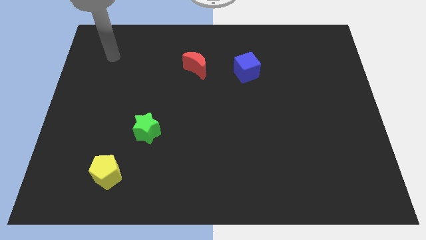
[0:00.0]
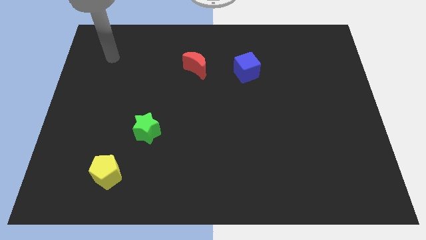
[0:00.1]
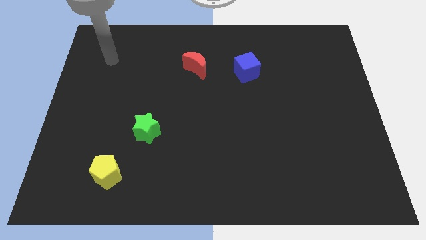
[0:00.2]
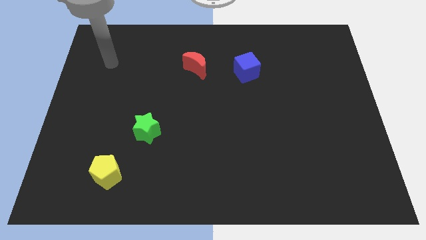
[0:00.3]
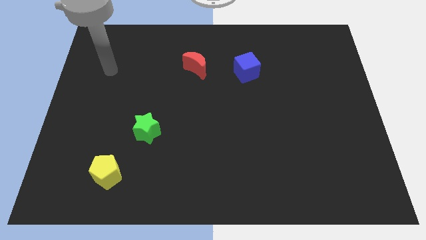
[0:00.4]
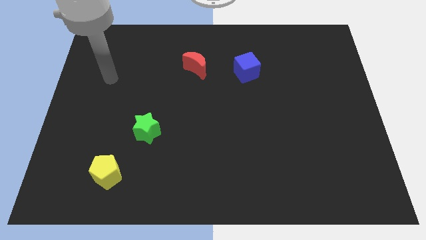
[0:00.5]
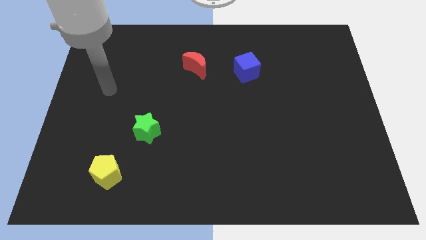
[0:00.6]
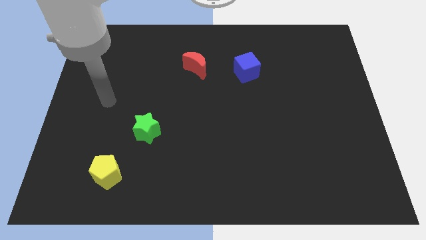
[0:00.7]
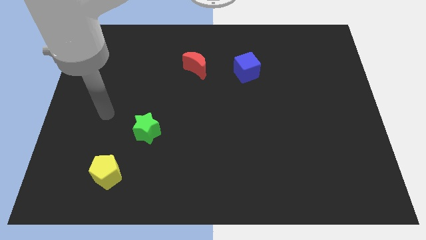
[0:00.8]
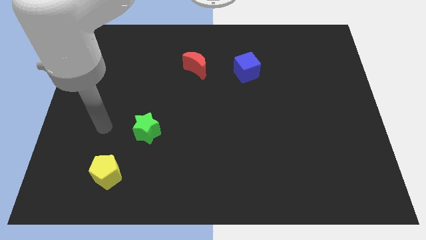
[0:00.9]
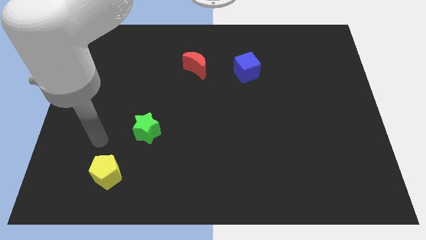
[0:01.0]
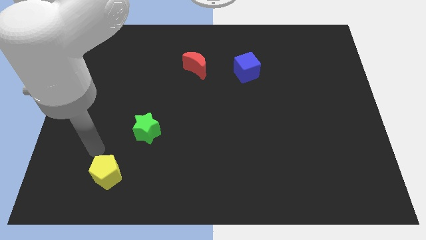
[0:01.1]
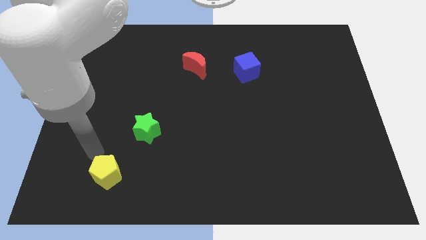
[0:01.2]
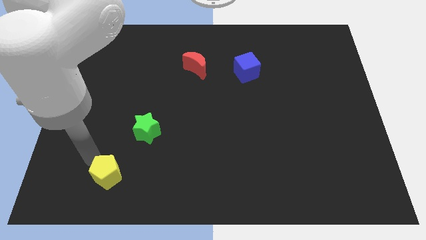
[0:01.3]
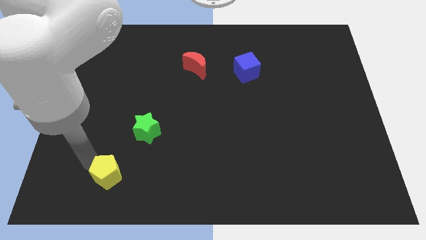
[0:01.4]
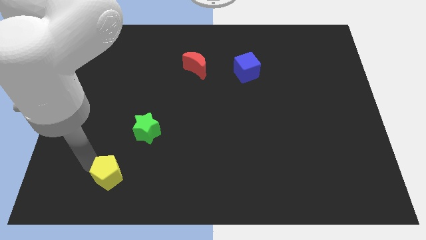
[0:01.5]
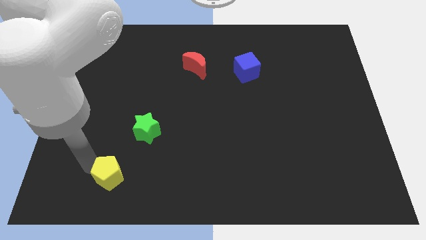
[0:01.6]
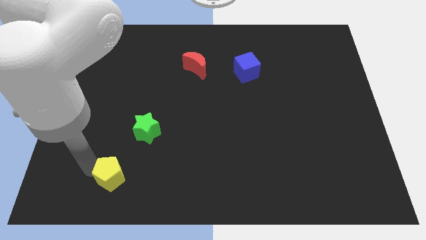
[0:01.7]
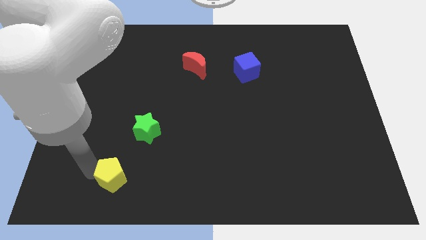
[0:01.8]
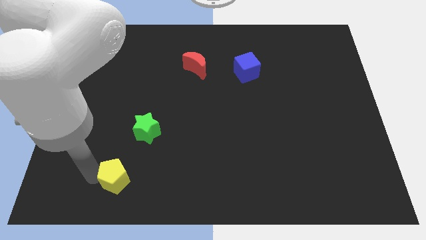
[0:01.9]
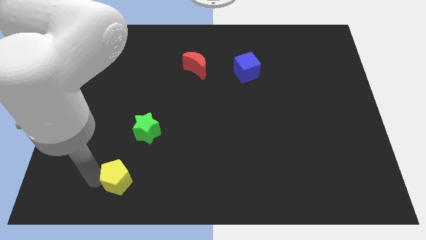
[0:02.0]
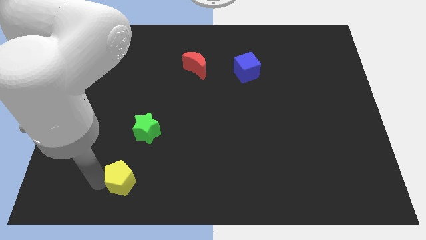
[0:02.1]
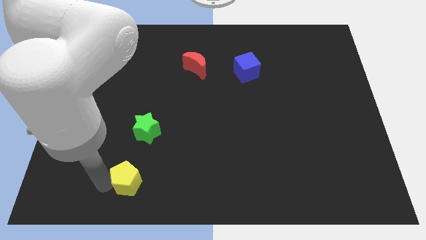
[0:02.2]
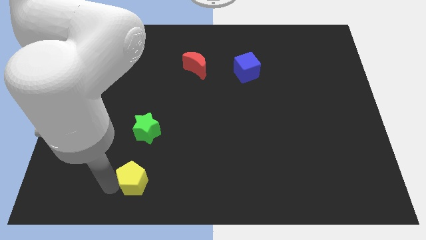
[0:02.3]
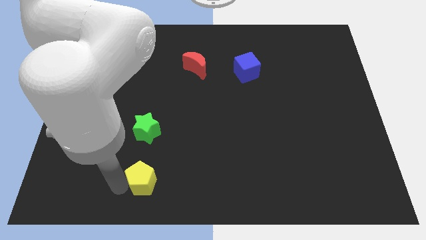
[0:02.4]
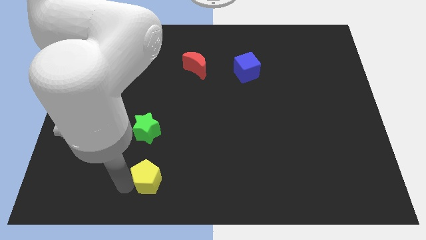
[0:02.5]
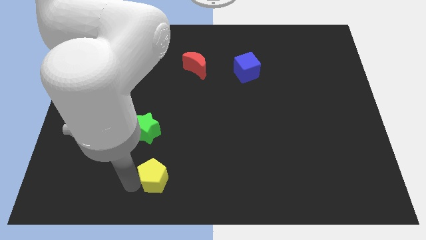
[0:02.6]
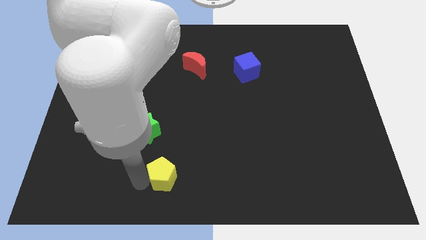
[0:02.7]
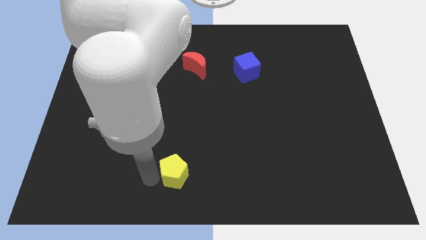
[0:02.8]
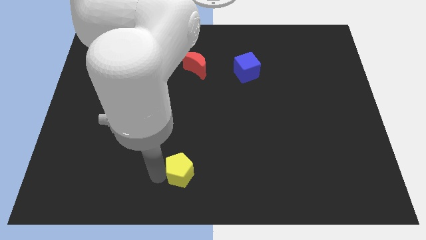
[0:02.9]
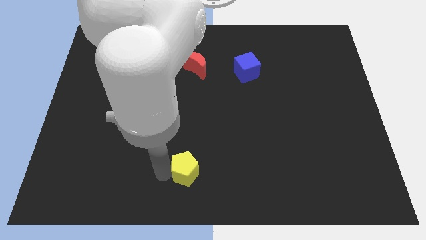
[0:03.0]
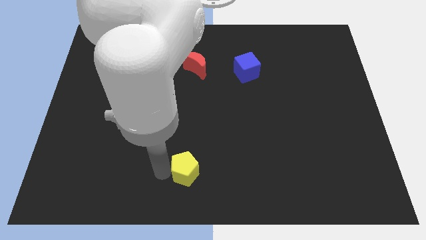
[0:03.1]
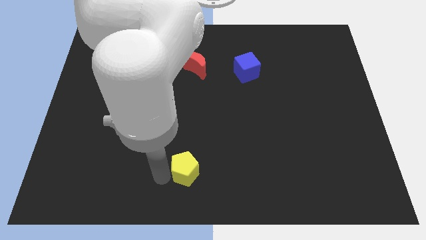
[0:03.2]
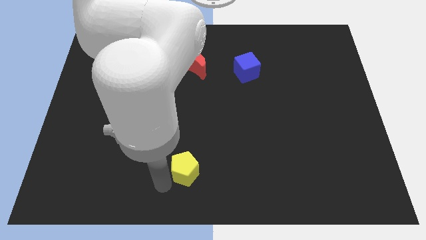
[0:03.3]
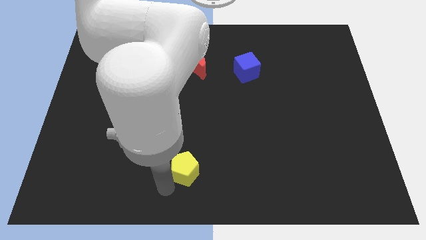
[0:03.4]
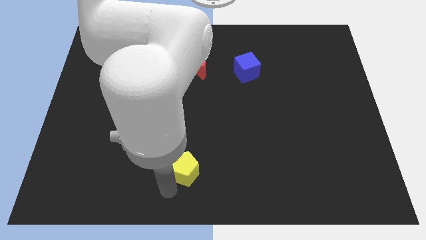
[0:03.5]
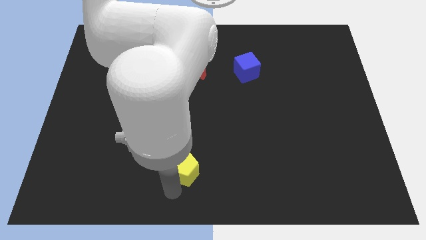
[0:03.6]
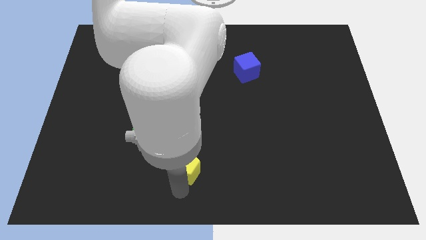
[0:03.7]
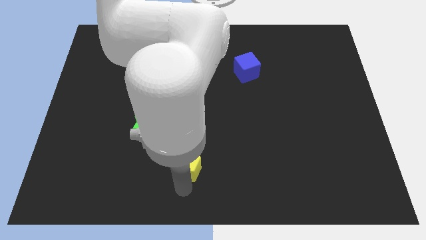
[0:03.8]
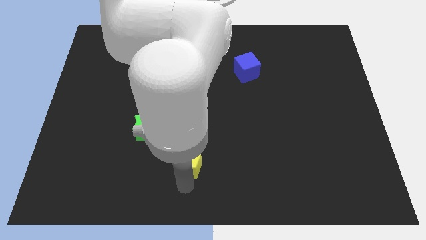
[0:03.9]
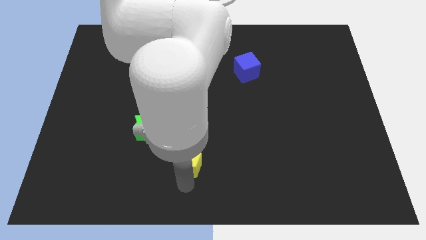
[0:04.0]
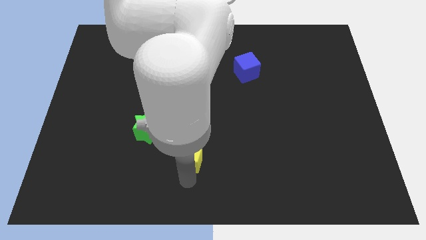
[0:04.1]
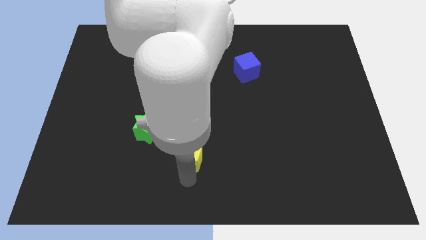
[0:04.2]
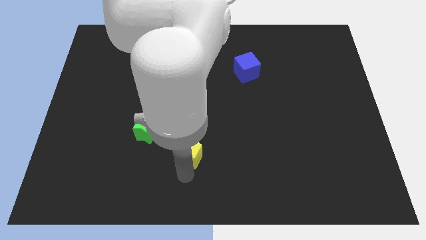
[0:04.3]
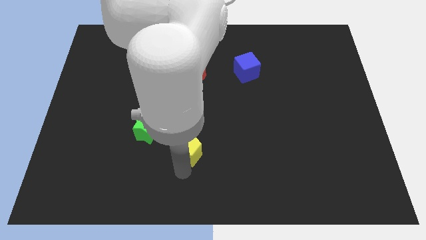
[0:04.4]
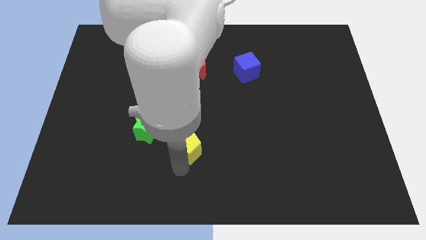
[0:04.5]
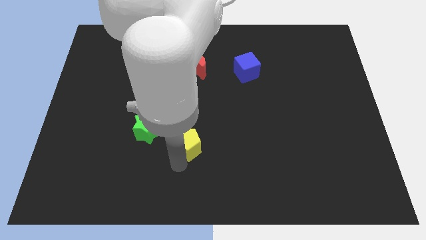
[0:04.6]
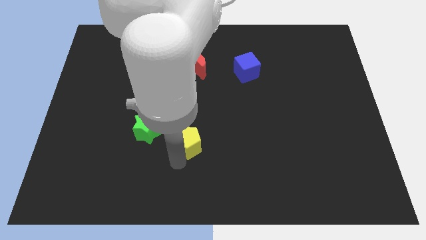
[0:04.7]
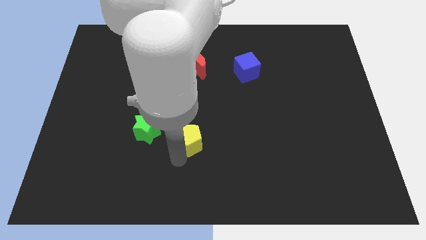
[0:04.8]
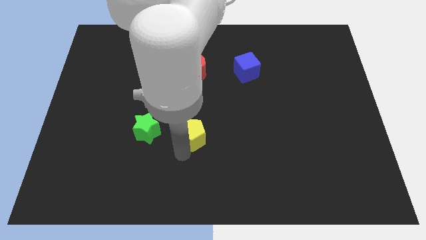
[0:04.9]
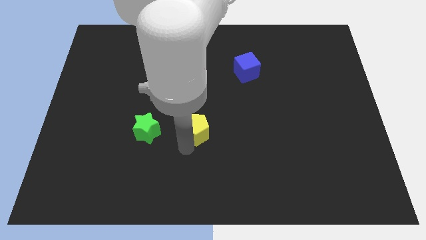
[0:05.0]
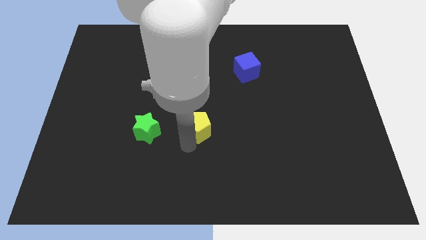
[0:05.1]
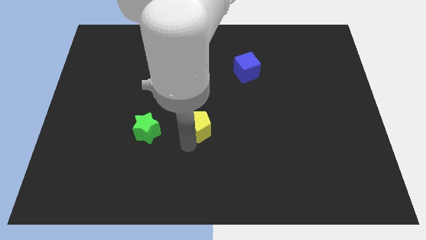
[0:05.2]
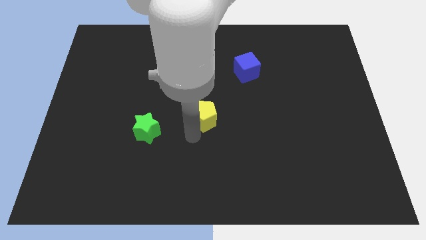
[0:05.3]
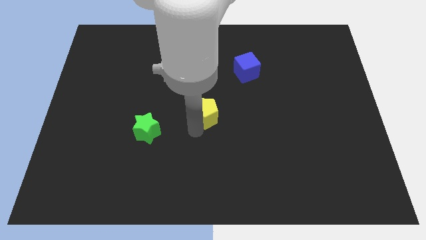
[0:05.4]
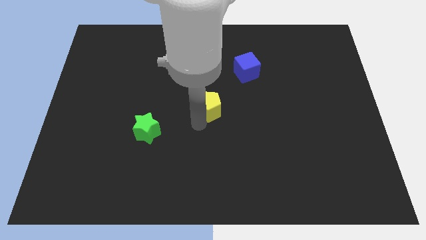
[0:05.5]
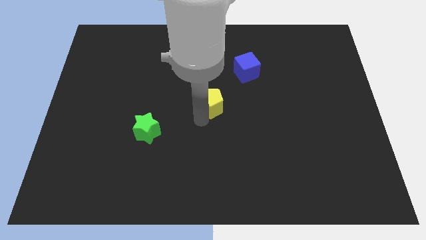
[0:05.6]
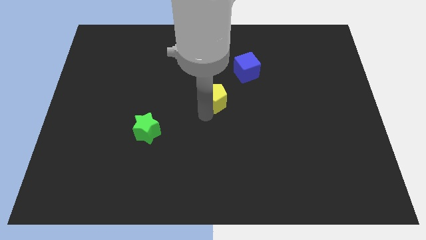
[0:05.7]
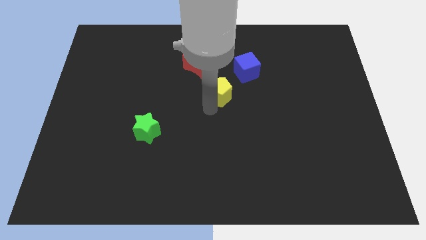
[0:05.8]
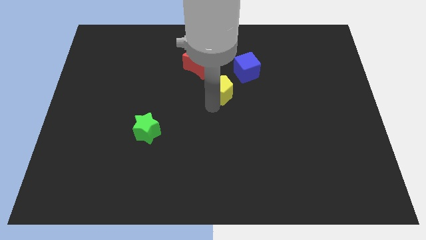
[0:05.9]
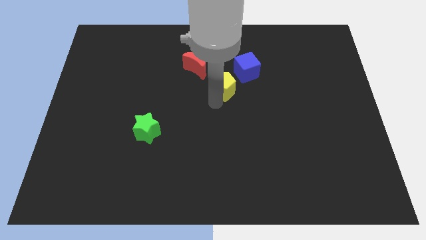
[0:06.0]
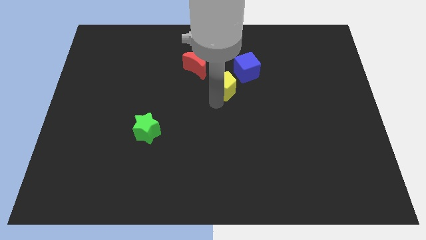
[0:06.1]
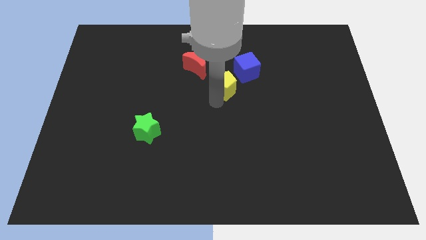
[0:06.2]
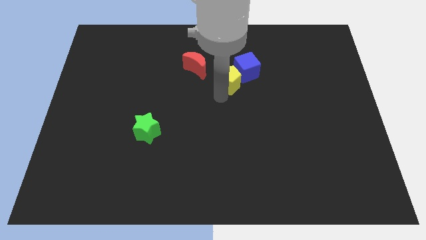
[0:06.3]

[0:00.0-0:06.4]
put the yellow block next to the blue block

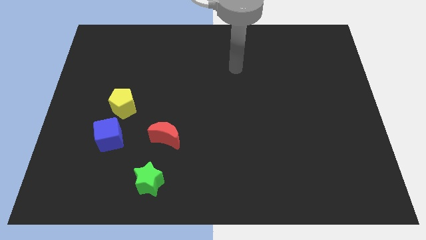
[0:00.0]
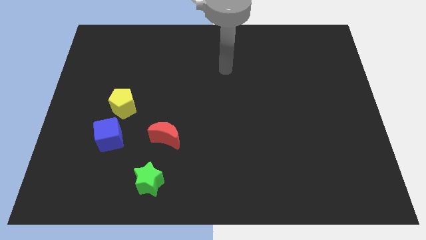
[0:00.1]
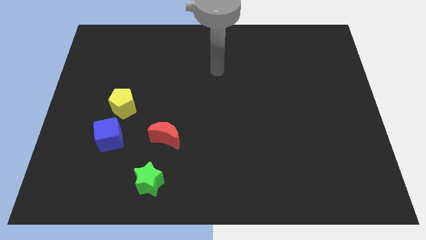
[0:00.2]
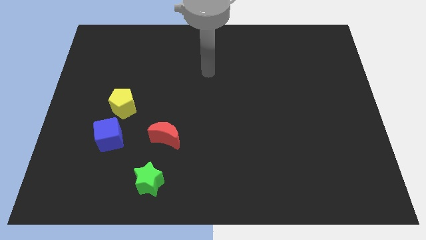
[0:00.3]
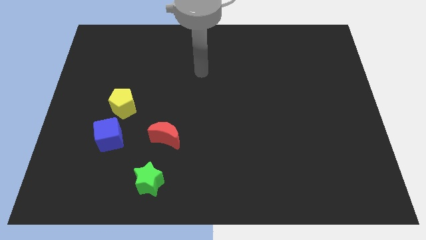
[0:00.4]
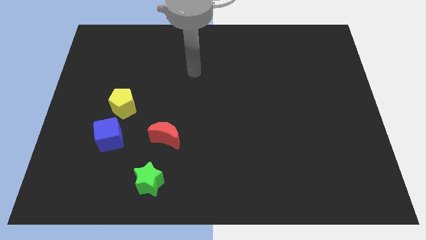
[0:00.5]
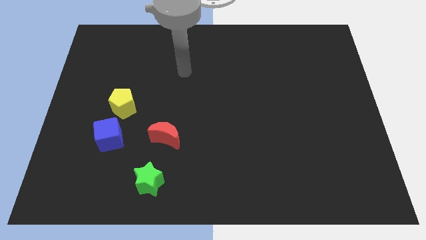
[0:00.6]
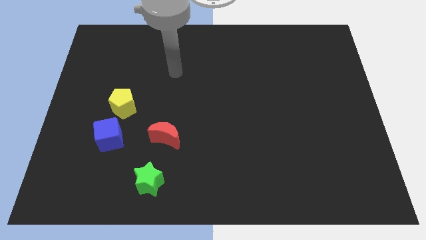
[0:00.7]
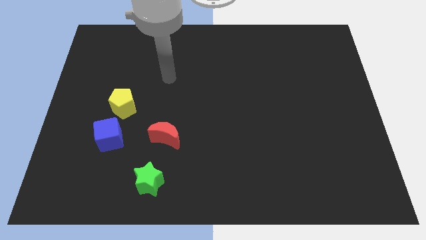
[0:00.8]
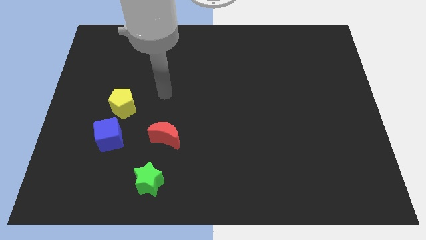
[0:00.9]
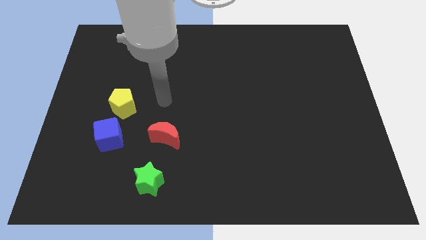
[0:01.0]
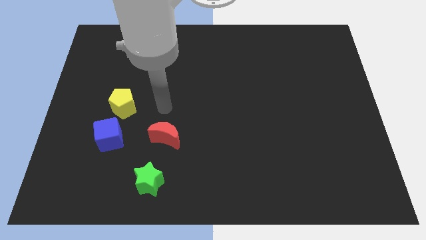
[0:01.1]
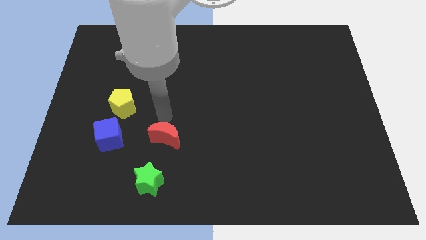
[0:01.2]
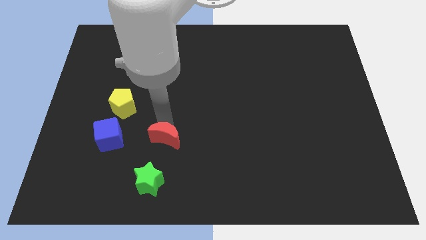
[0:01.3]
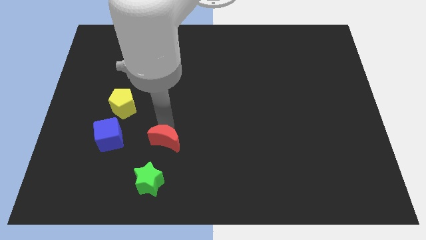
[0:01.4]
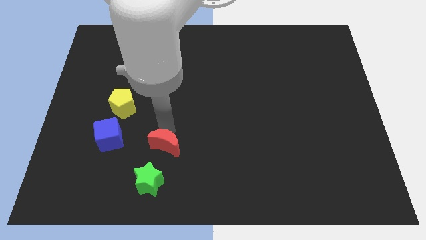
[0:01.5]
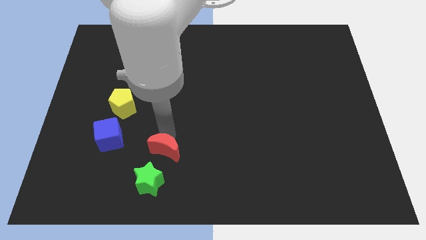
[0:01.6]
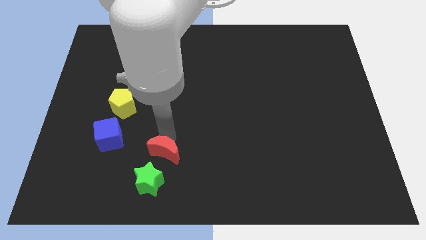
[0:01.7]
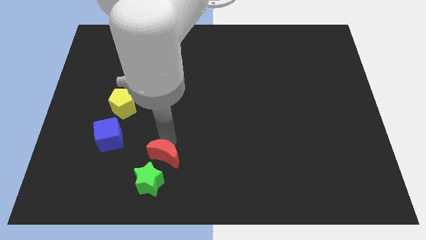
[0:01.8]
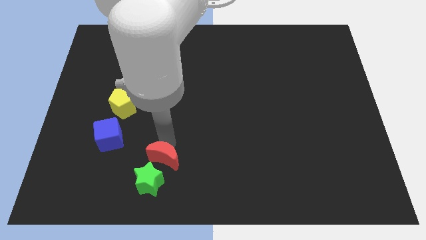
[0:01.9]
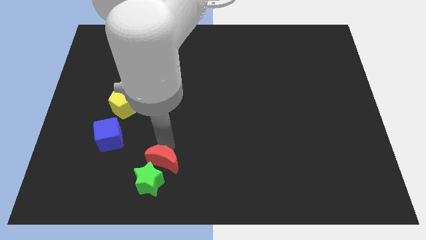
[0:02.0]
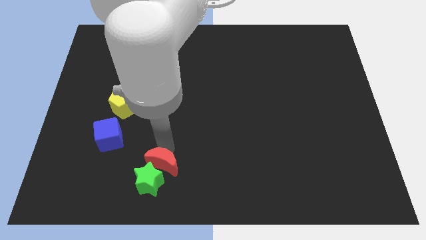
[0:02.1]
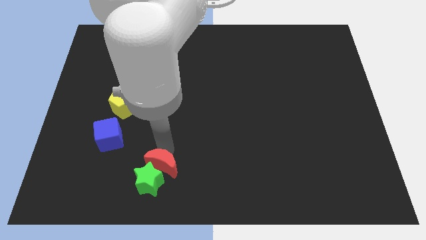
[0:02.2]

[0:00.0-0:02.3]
move the moon close to the green star

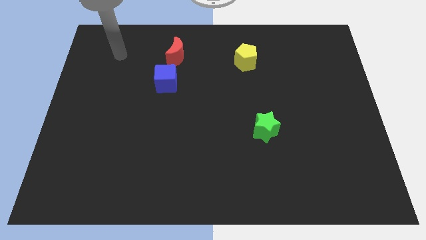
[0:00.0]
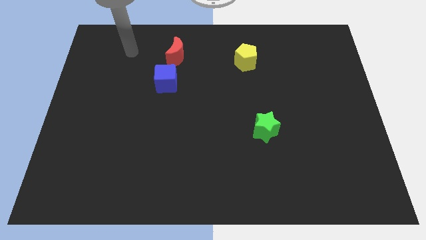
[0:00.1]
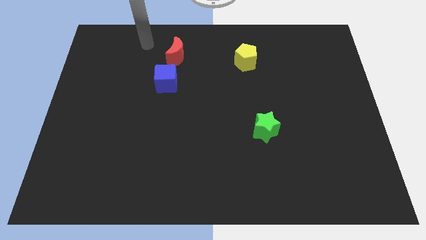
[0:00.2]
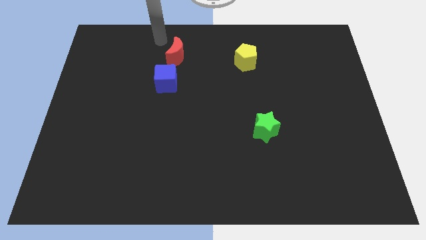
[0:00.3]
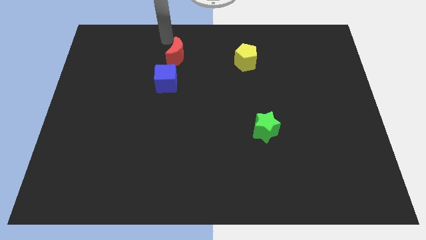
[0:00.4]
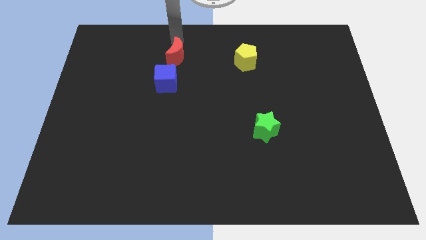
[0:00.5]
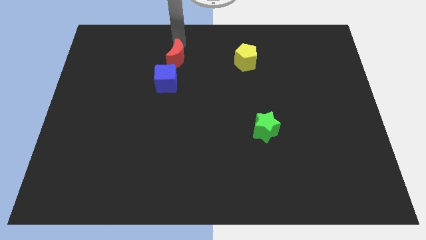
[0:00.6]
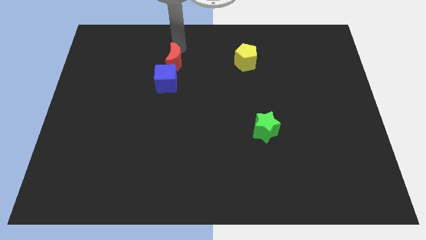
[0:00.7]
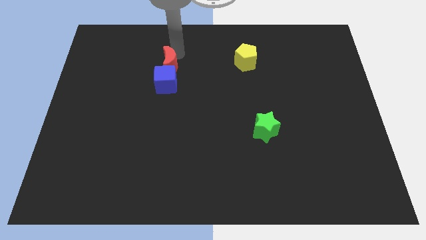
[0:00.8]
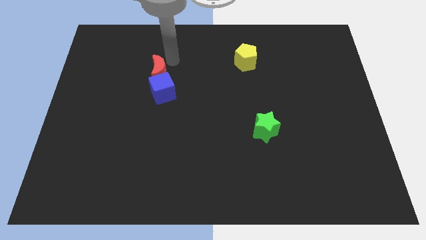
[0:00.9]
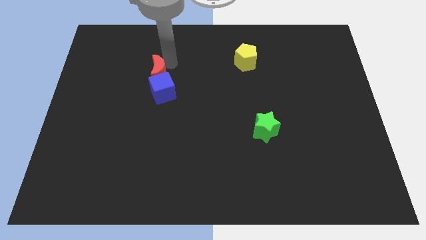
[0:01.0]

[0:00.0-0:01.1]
put the red moon next to the blue block
